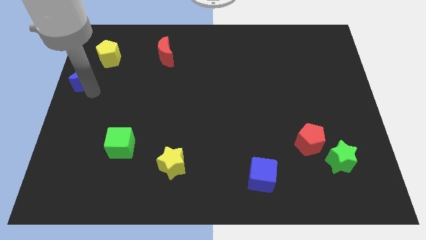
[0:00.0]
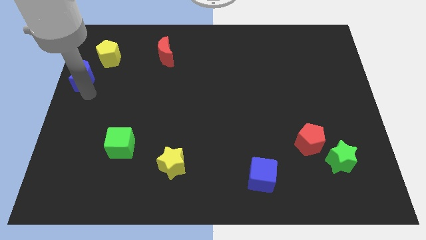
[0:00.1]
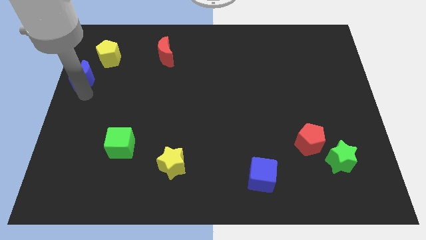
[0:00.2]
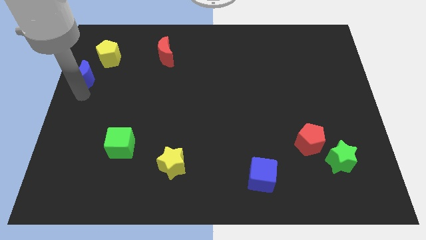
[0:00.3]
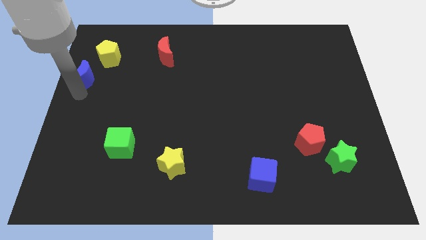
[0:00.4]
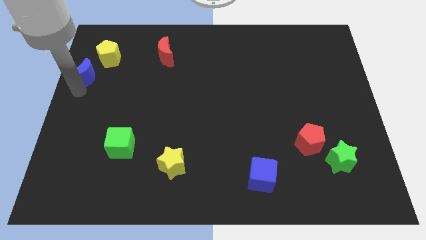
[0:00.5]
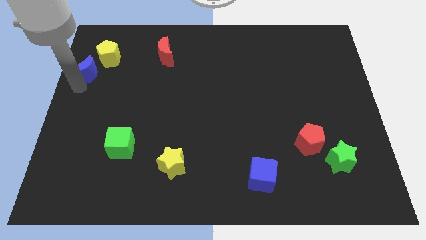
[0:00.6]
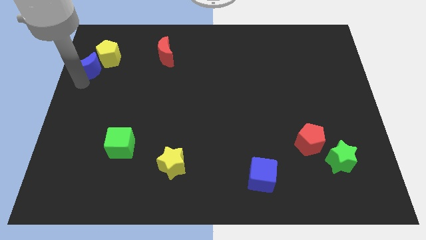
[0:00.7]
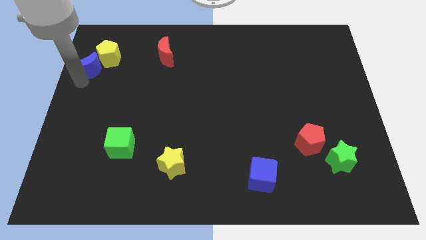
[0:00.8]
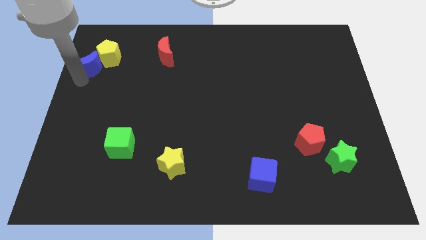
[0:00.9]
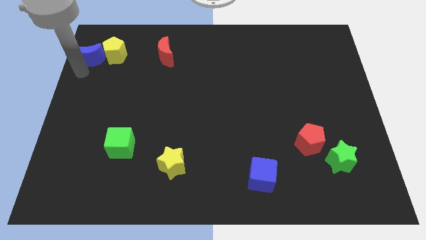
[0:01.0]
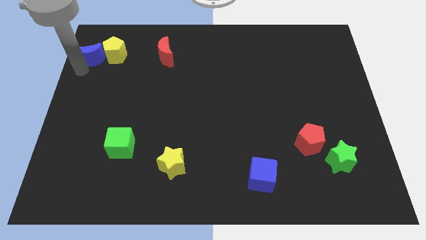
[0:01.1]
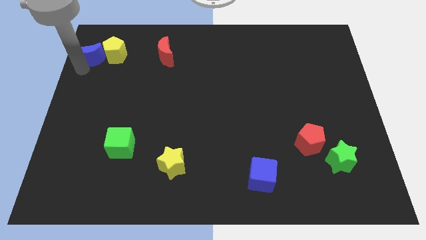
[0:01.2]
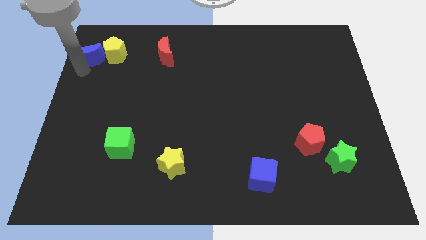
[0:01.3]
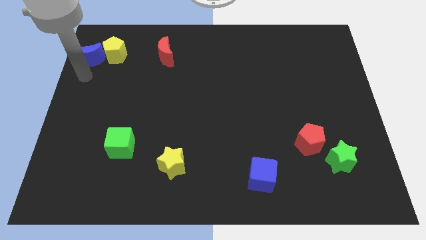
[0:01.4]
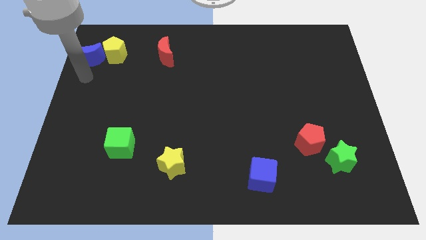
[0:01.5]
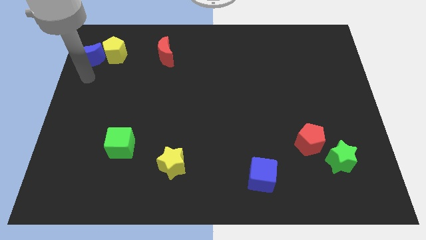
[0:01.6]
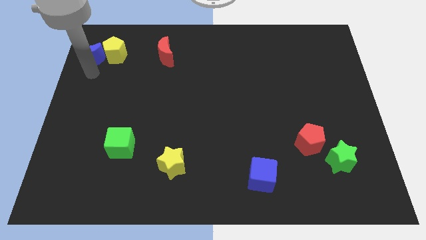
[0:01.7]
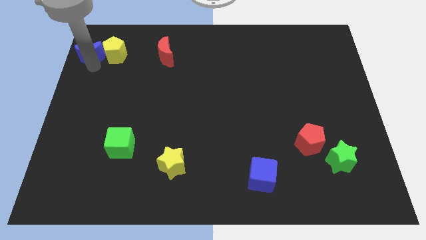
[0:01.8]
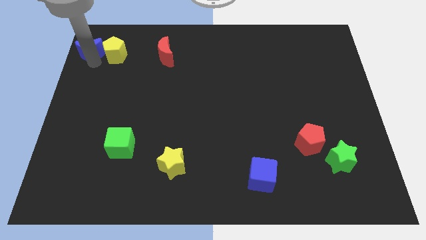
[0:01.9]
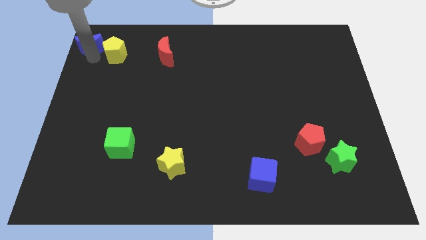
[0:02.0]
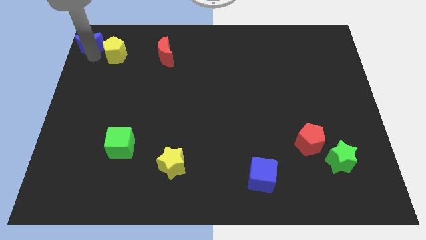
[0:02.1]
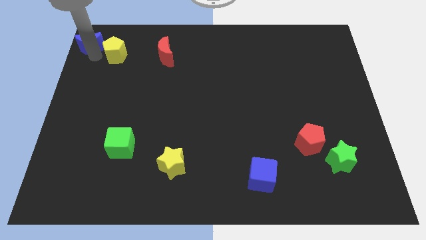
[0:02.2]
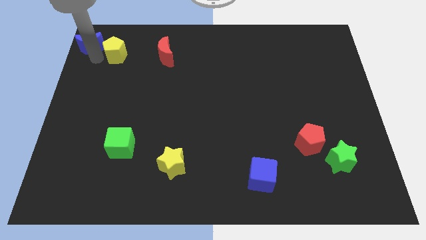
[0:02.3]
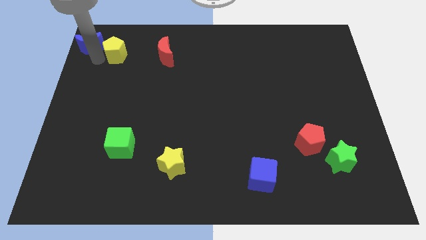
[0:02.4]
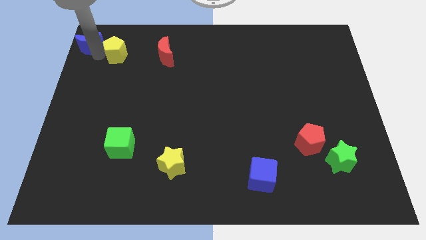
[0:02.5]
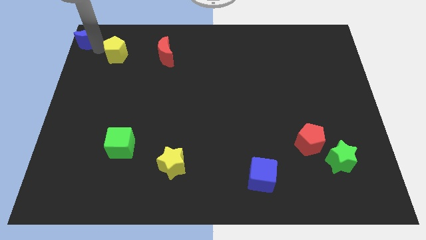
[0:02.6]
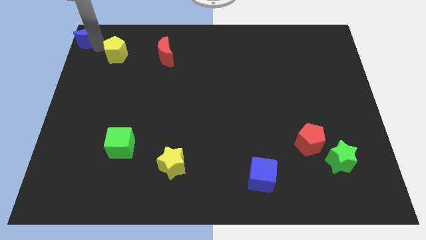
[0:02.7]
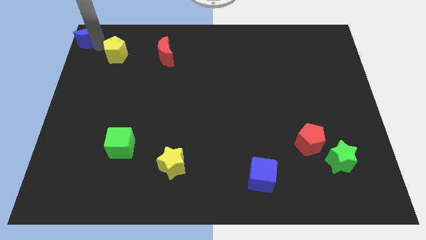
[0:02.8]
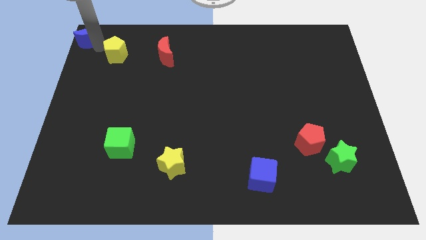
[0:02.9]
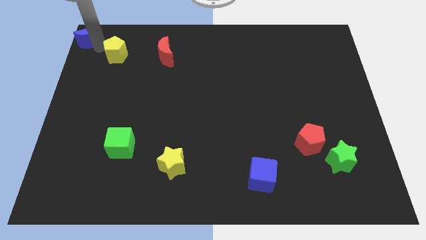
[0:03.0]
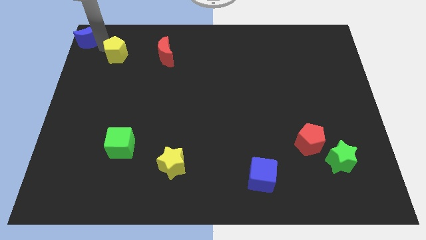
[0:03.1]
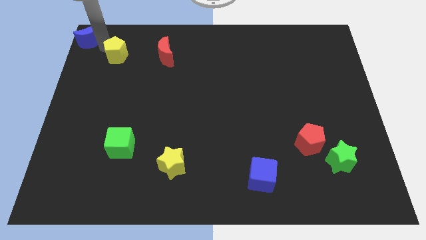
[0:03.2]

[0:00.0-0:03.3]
move the blue crescent to the top left corner of the board

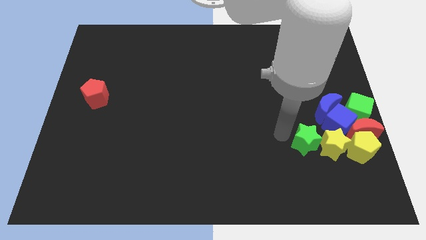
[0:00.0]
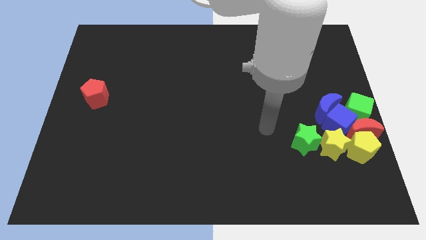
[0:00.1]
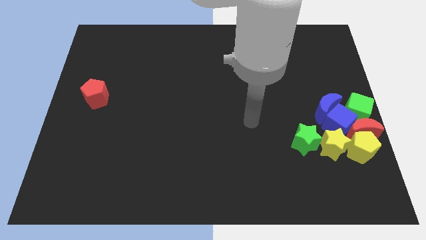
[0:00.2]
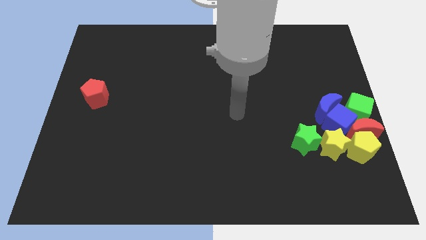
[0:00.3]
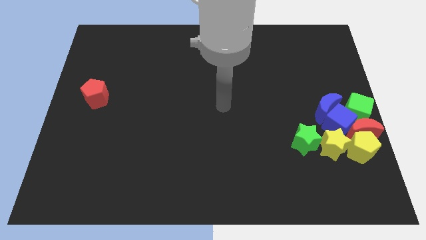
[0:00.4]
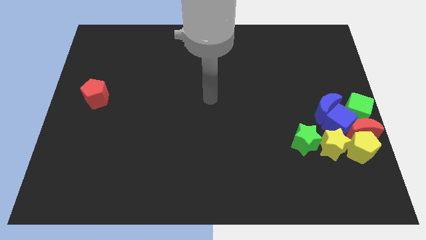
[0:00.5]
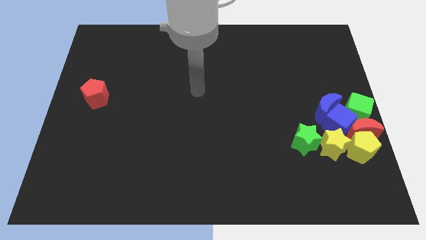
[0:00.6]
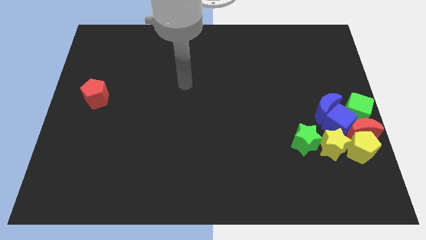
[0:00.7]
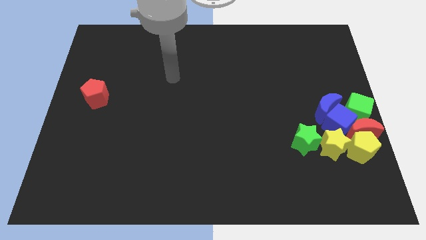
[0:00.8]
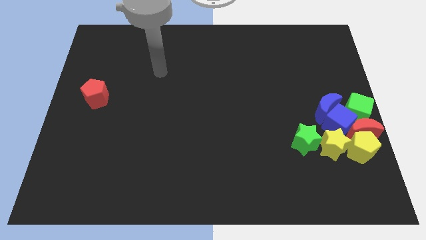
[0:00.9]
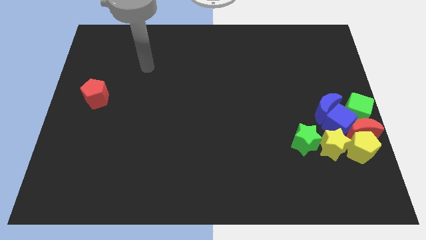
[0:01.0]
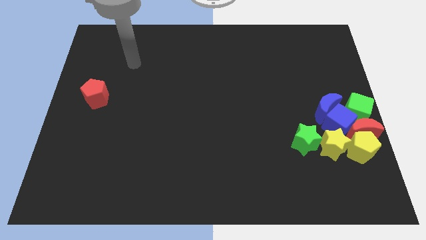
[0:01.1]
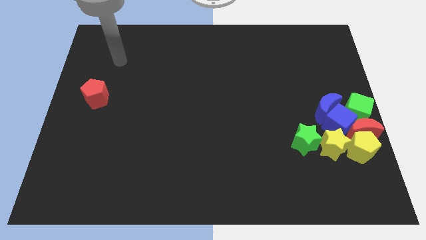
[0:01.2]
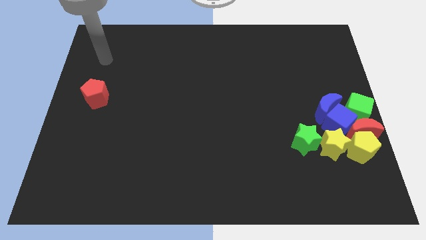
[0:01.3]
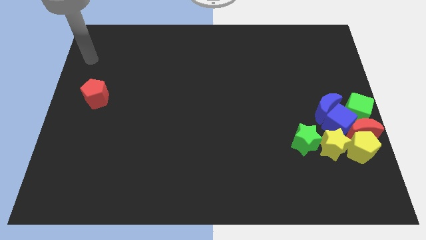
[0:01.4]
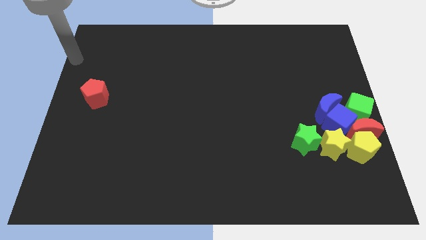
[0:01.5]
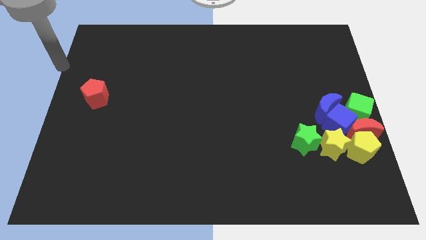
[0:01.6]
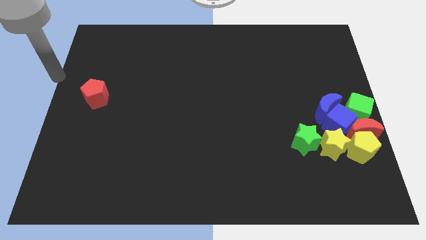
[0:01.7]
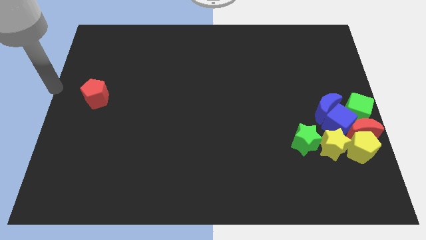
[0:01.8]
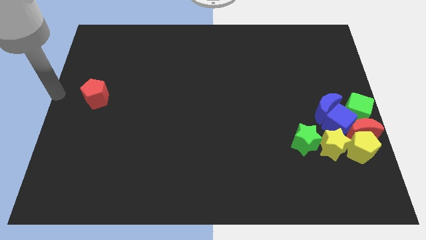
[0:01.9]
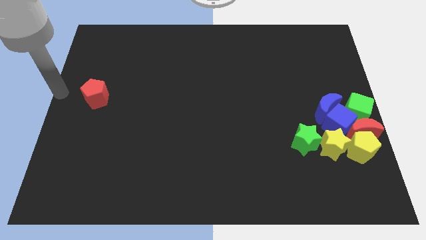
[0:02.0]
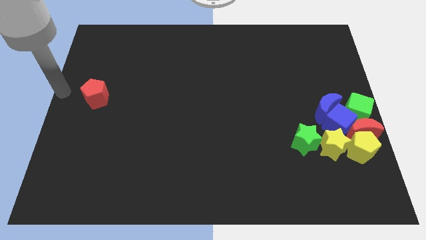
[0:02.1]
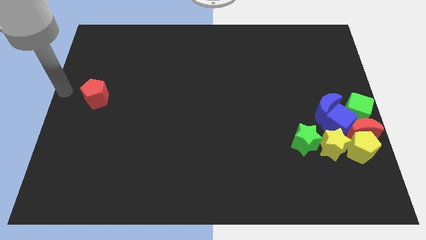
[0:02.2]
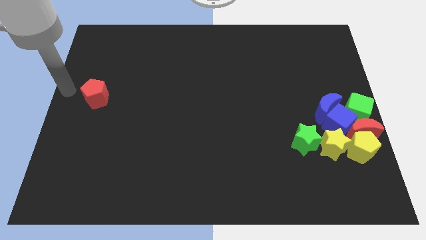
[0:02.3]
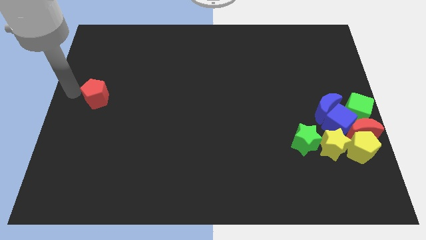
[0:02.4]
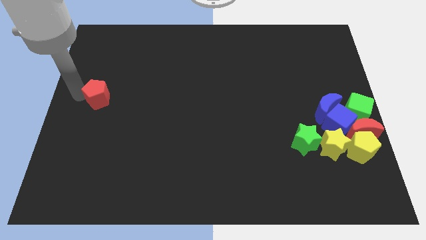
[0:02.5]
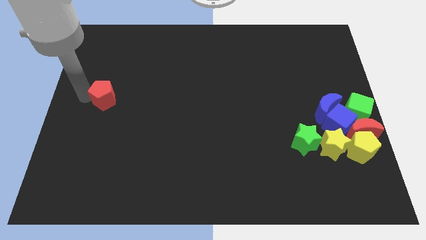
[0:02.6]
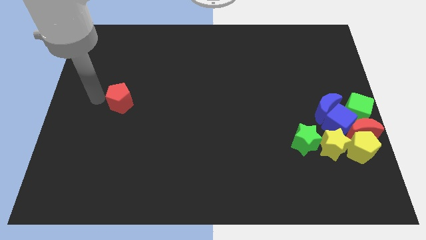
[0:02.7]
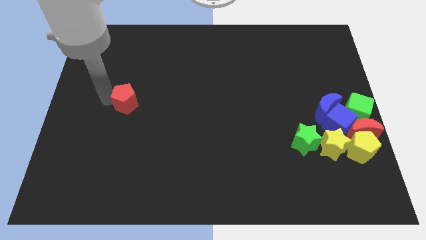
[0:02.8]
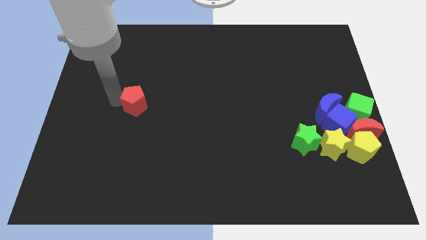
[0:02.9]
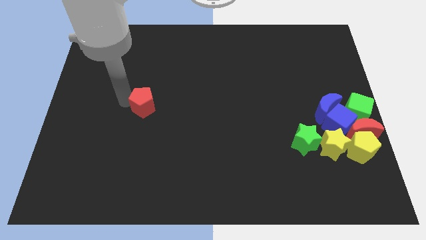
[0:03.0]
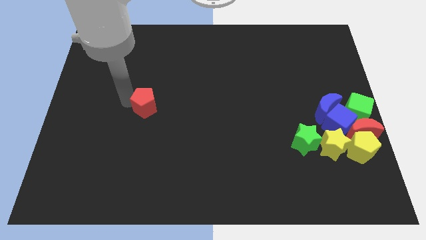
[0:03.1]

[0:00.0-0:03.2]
push the red pentagon towards the center of the table

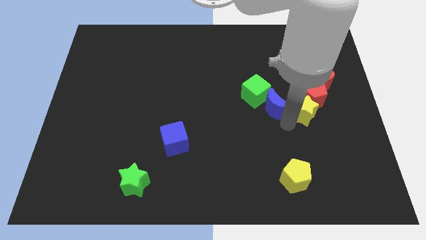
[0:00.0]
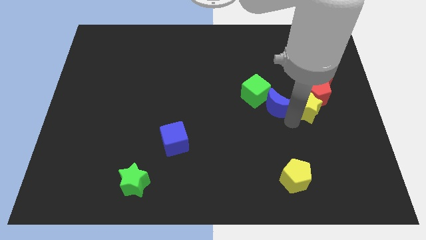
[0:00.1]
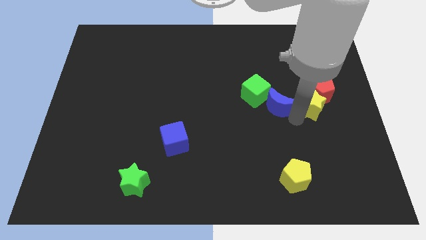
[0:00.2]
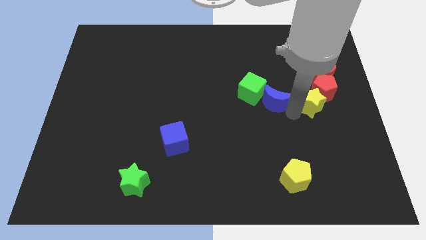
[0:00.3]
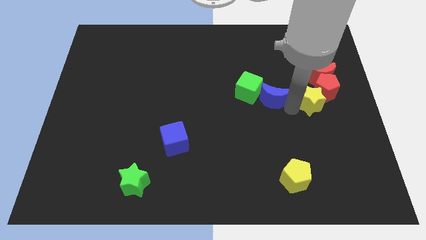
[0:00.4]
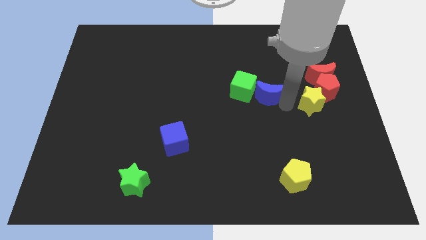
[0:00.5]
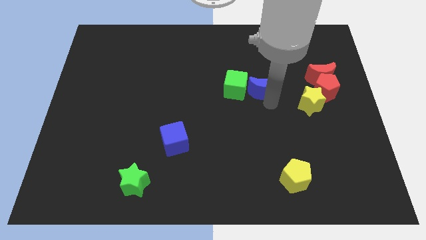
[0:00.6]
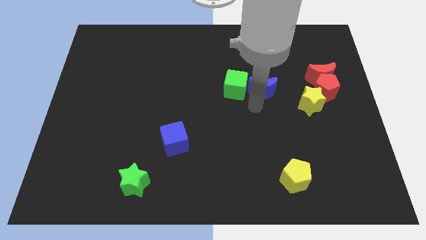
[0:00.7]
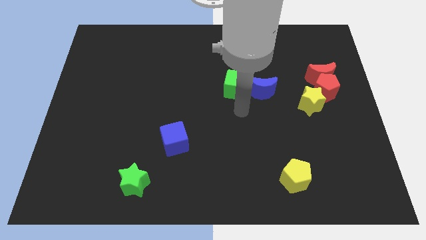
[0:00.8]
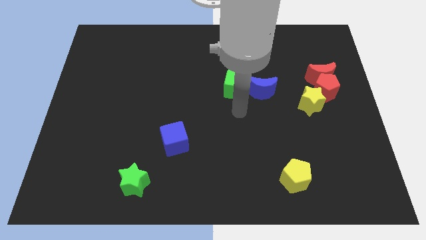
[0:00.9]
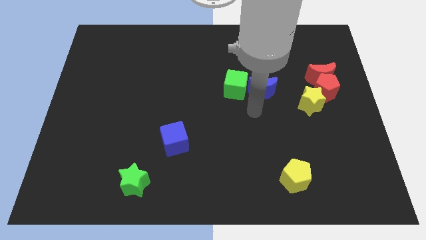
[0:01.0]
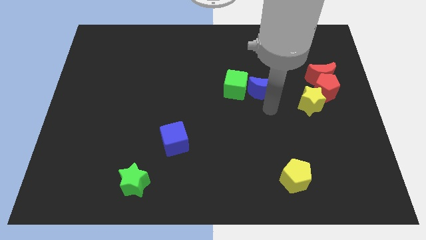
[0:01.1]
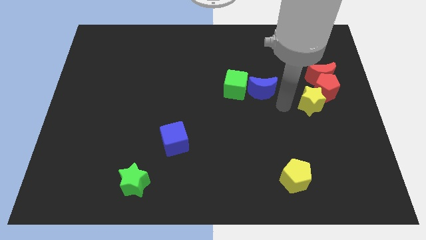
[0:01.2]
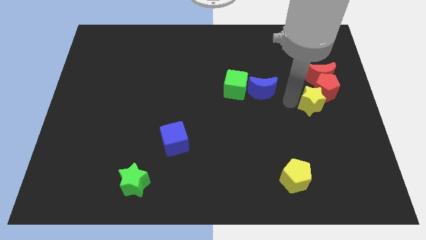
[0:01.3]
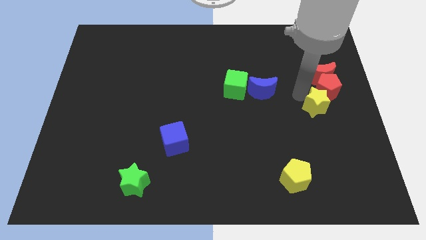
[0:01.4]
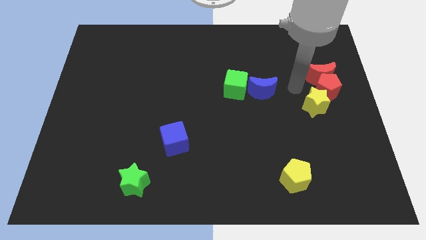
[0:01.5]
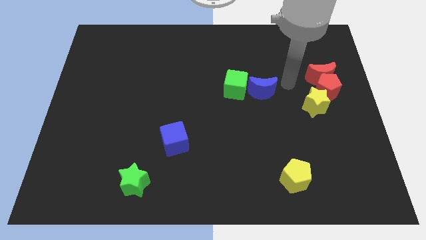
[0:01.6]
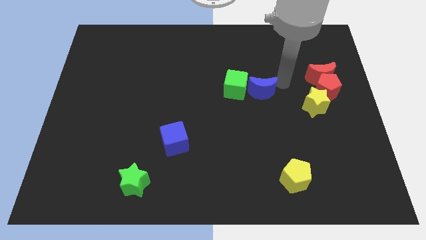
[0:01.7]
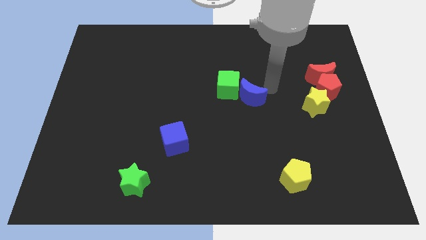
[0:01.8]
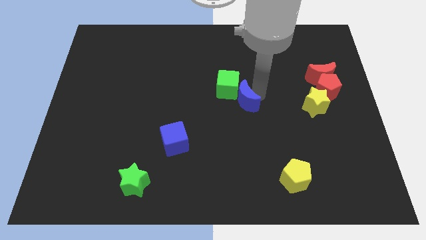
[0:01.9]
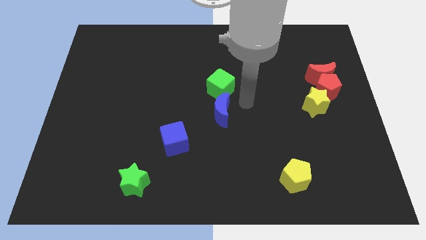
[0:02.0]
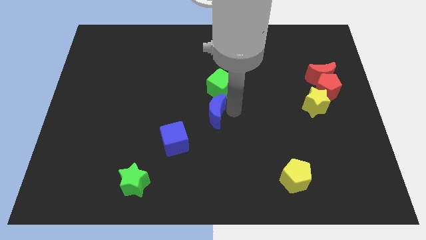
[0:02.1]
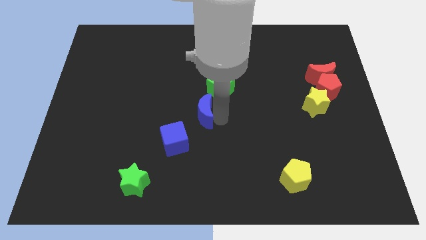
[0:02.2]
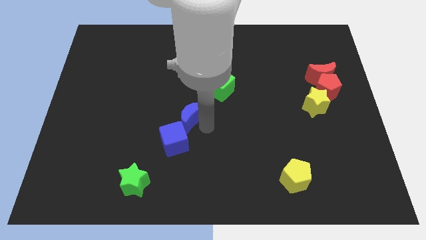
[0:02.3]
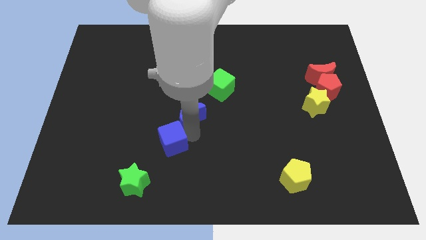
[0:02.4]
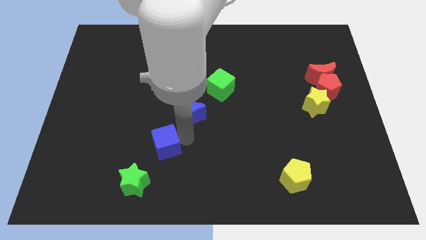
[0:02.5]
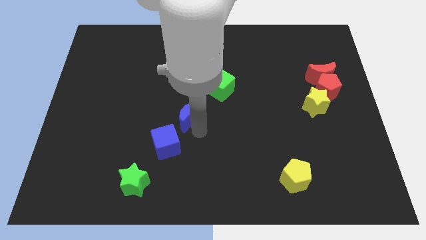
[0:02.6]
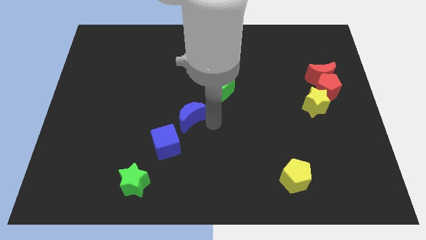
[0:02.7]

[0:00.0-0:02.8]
move blue moon diagonal to the blue cube
